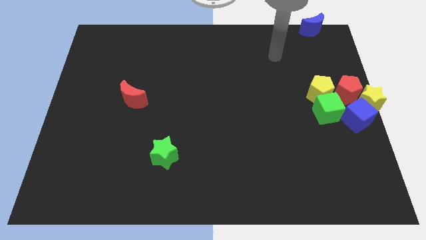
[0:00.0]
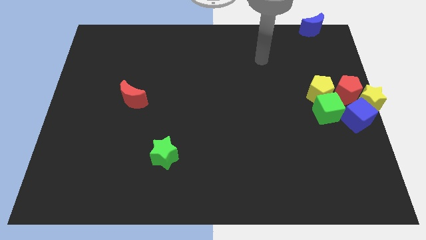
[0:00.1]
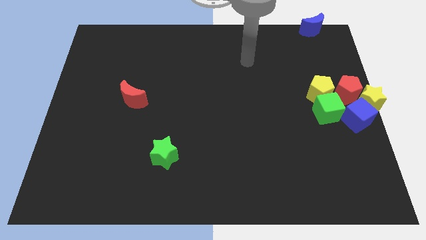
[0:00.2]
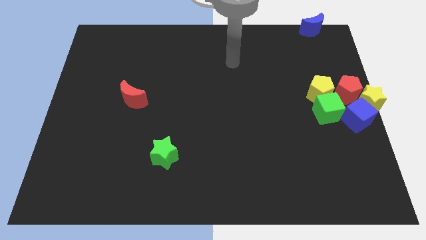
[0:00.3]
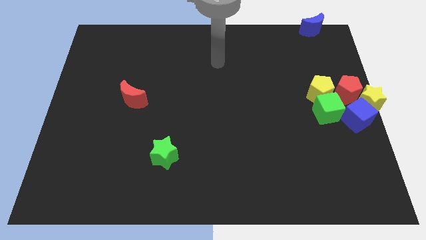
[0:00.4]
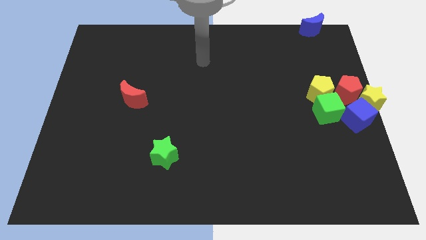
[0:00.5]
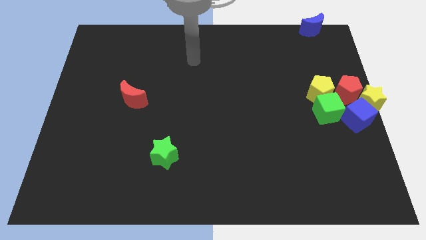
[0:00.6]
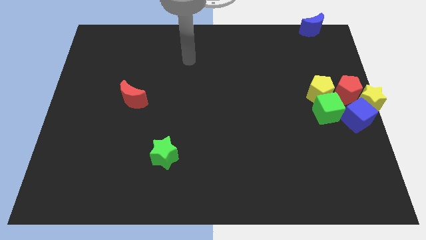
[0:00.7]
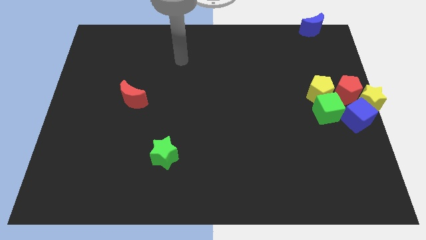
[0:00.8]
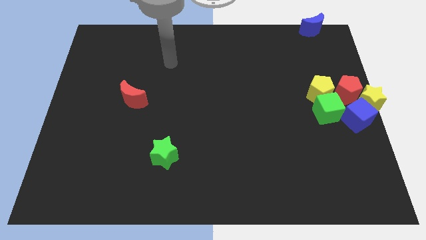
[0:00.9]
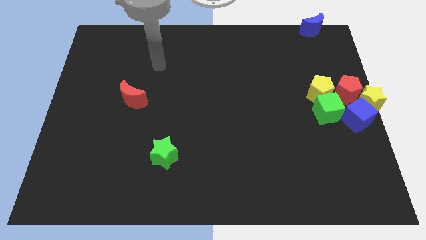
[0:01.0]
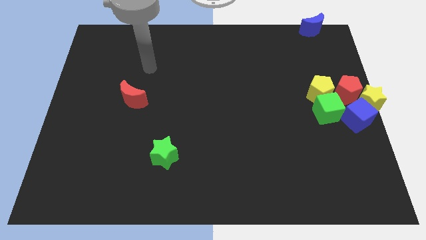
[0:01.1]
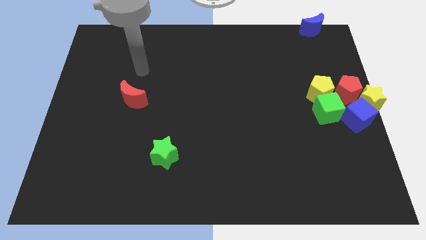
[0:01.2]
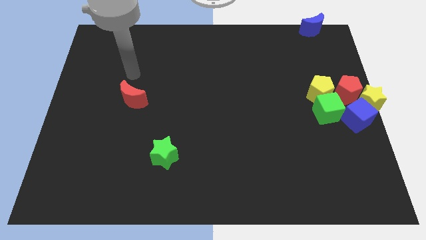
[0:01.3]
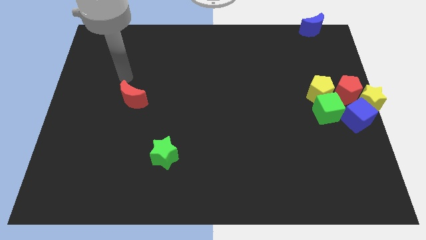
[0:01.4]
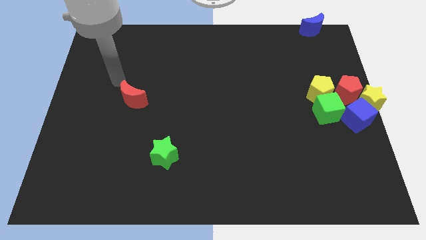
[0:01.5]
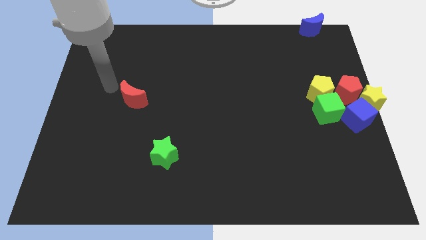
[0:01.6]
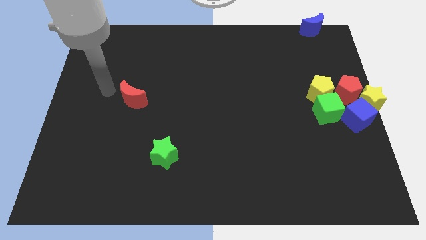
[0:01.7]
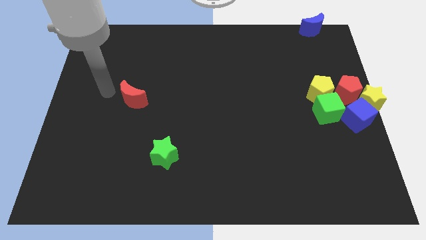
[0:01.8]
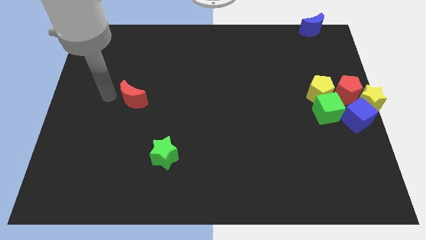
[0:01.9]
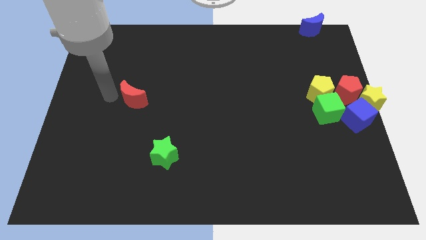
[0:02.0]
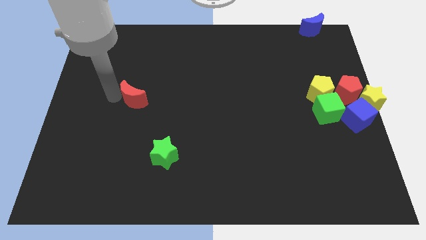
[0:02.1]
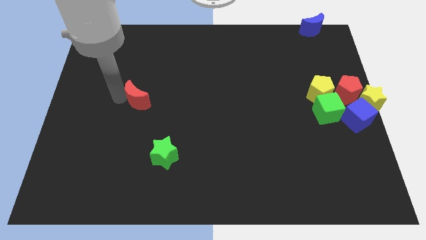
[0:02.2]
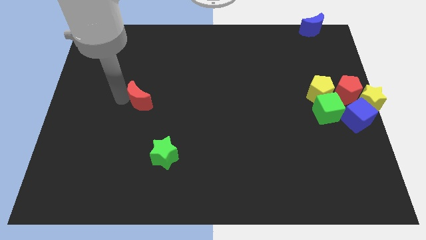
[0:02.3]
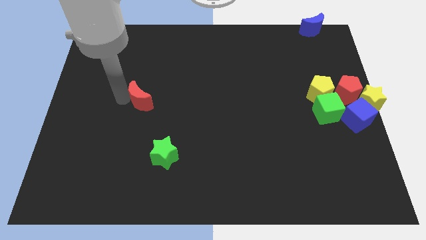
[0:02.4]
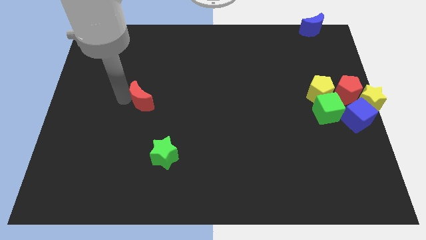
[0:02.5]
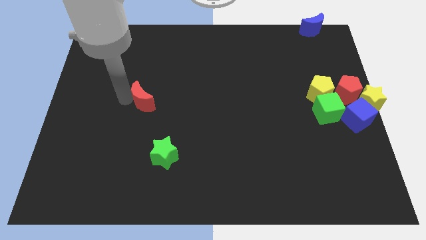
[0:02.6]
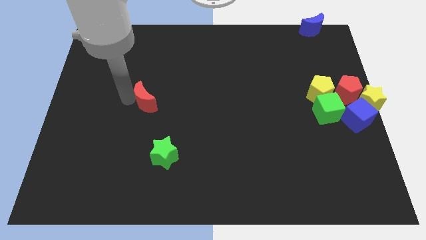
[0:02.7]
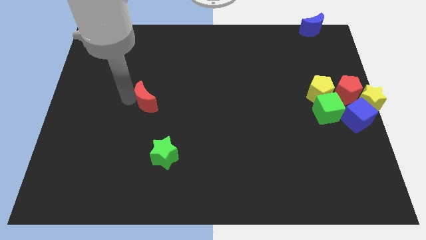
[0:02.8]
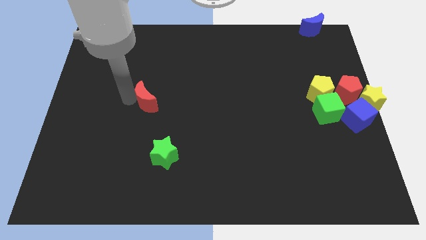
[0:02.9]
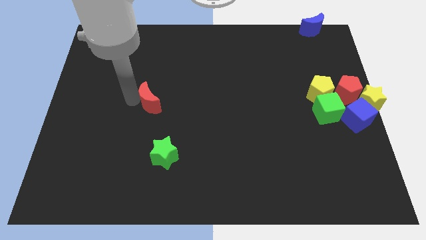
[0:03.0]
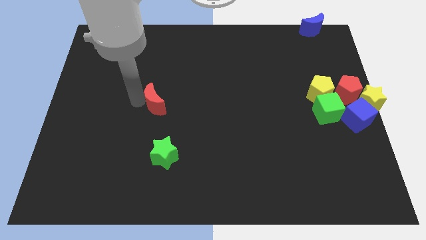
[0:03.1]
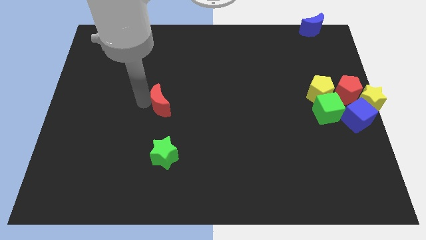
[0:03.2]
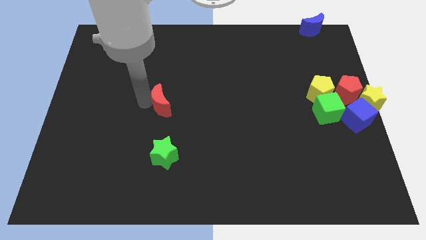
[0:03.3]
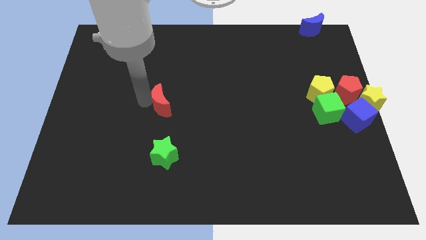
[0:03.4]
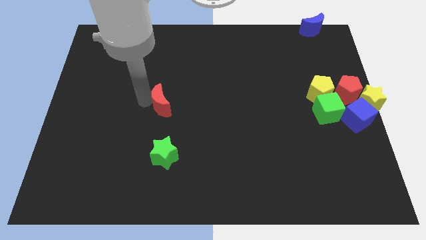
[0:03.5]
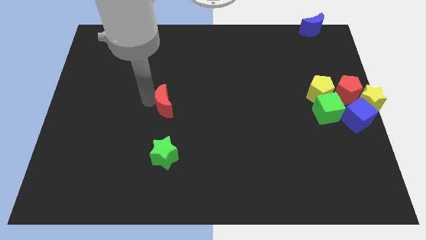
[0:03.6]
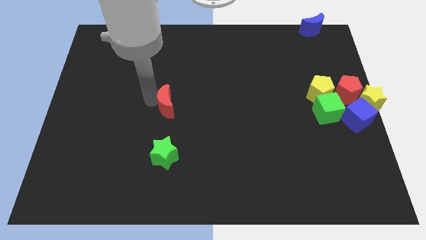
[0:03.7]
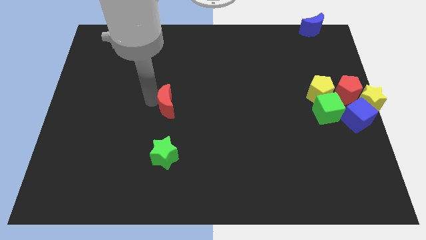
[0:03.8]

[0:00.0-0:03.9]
push the red crescent towards the top side of the green star

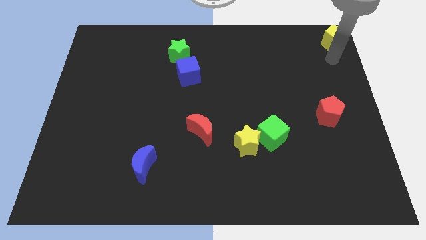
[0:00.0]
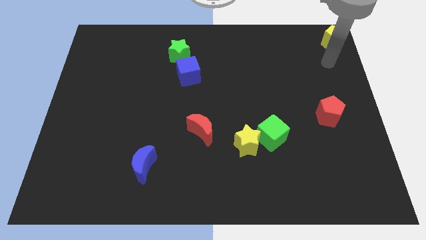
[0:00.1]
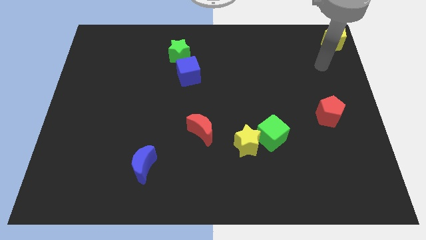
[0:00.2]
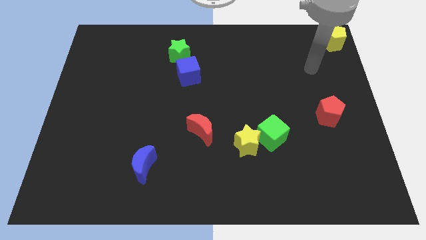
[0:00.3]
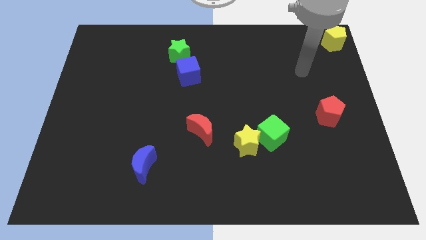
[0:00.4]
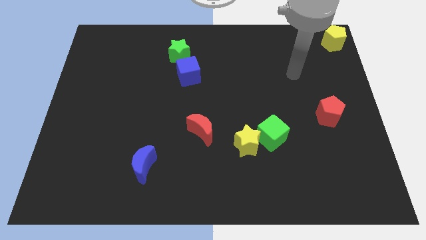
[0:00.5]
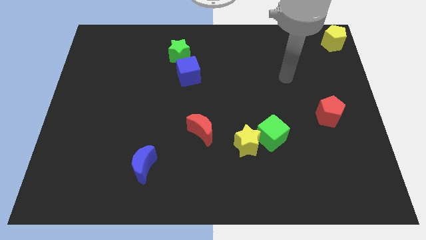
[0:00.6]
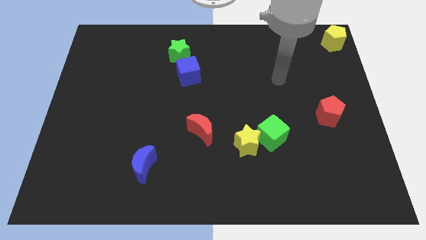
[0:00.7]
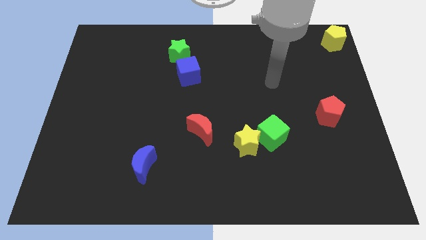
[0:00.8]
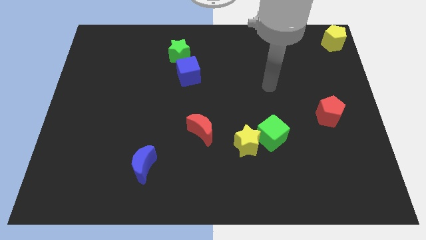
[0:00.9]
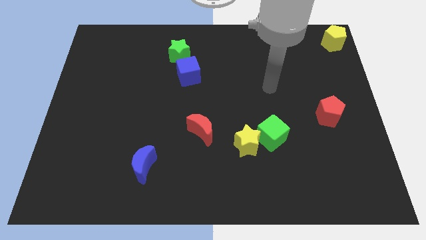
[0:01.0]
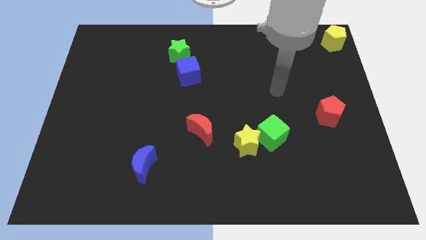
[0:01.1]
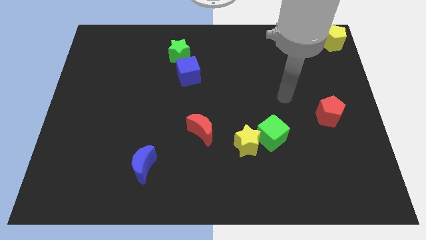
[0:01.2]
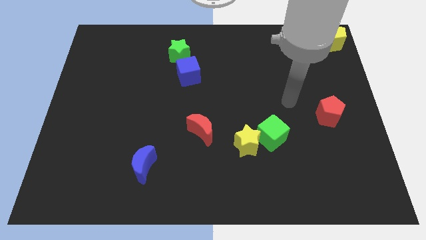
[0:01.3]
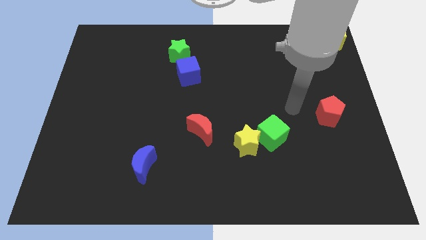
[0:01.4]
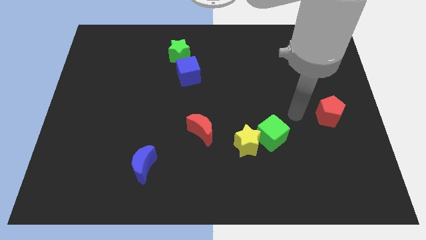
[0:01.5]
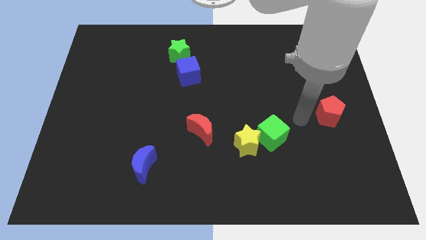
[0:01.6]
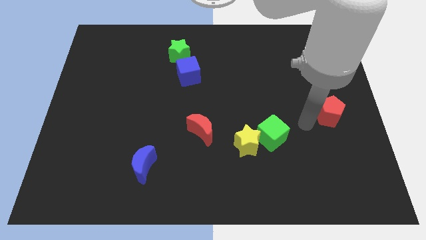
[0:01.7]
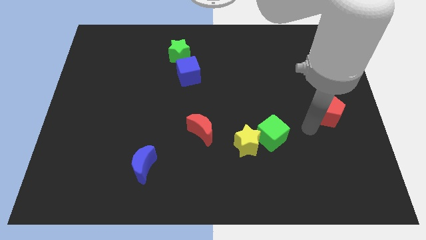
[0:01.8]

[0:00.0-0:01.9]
point your arm below red penatgon

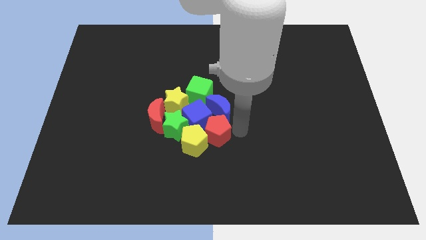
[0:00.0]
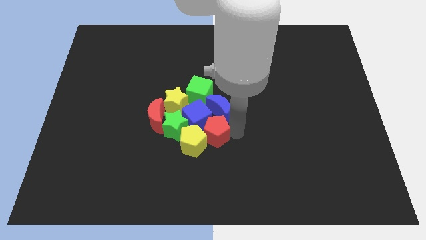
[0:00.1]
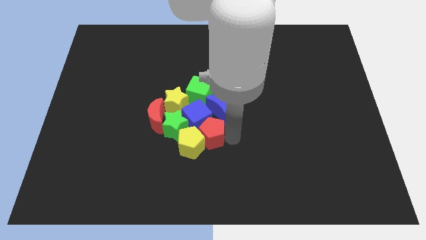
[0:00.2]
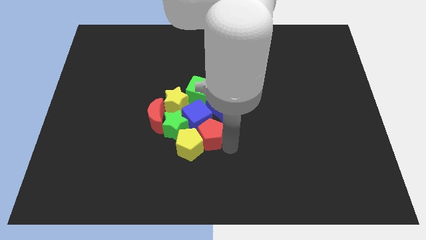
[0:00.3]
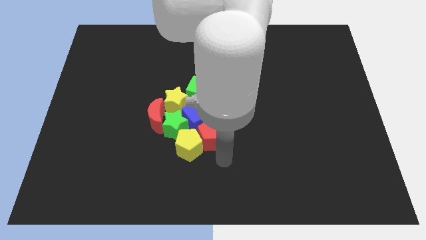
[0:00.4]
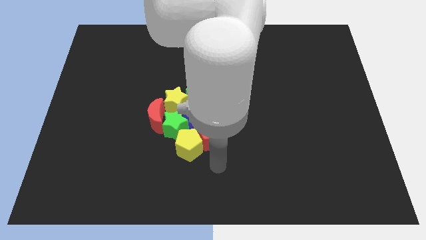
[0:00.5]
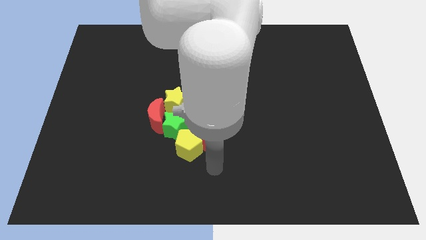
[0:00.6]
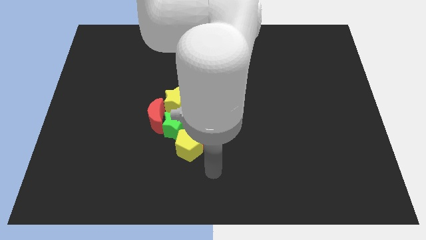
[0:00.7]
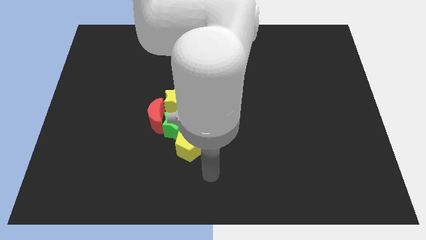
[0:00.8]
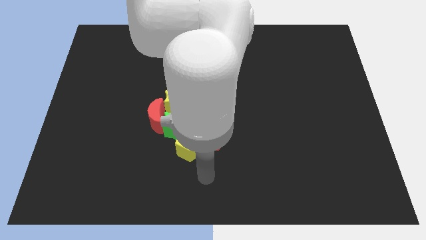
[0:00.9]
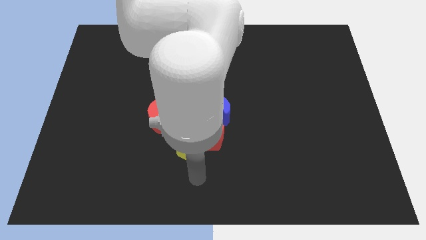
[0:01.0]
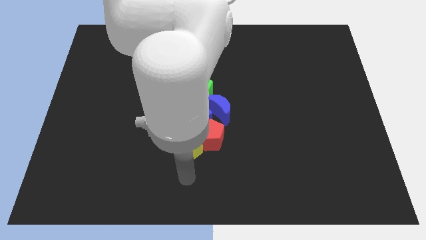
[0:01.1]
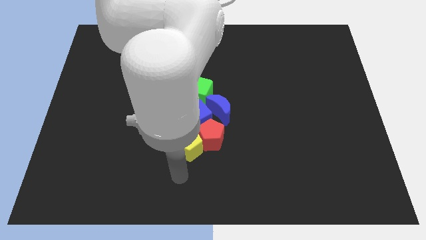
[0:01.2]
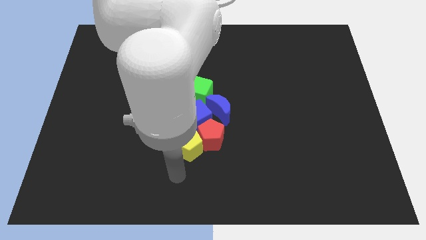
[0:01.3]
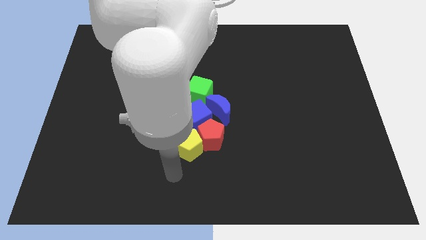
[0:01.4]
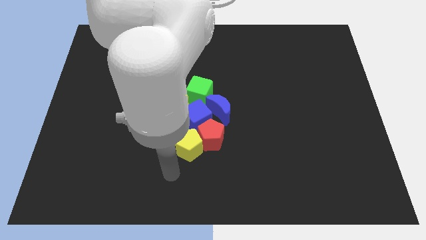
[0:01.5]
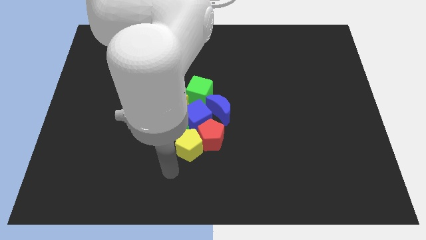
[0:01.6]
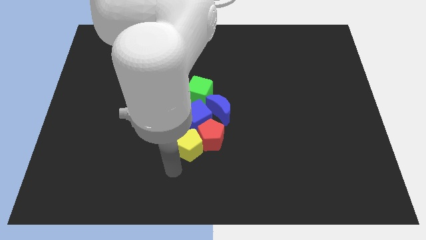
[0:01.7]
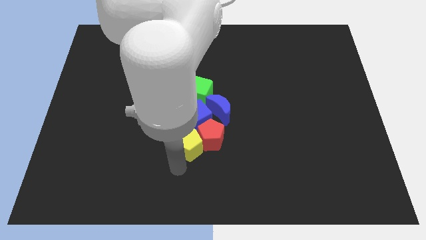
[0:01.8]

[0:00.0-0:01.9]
move your arm close to the yellow pentagon

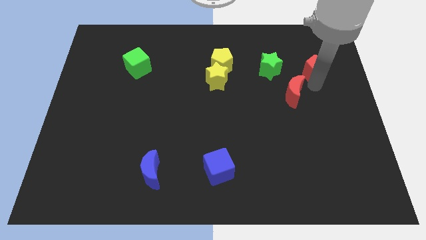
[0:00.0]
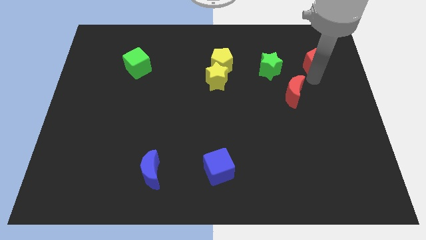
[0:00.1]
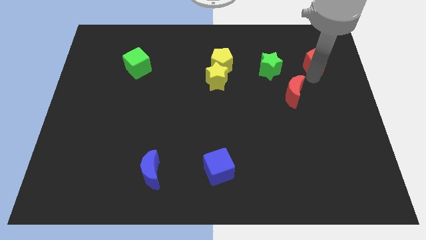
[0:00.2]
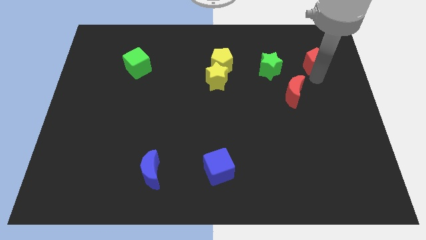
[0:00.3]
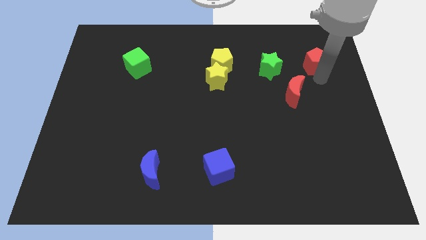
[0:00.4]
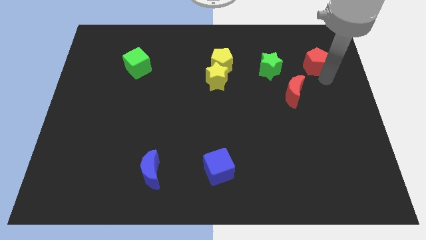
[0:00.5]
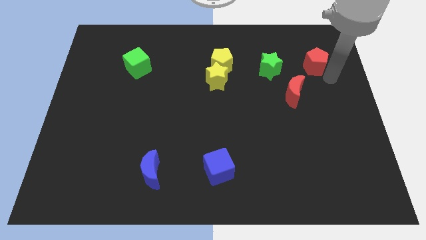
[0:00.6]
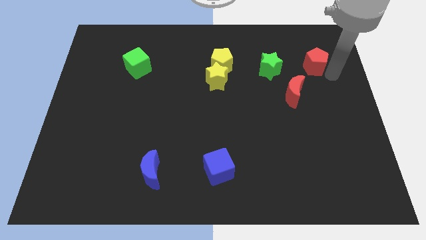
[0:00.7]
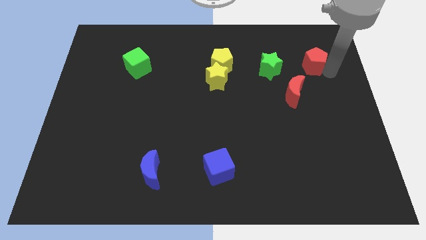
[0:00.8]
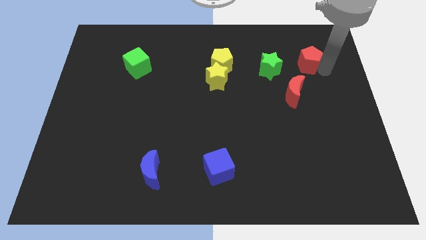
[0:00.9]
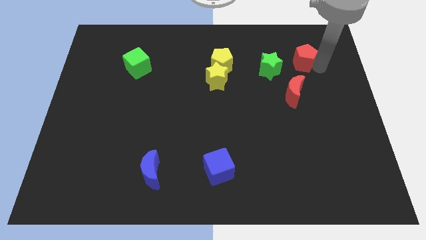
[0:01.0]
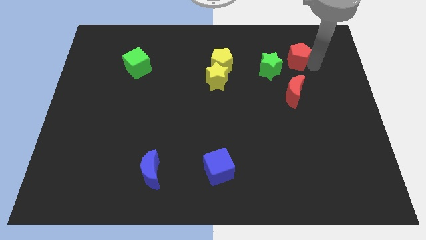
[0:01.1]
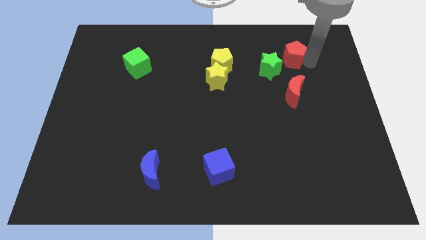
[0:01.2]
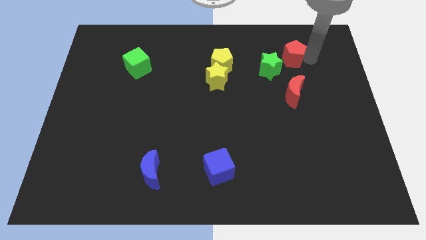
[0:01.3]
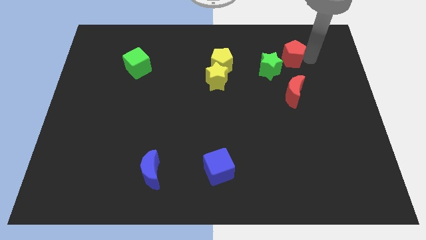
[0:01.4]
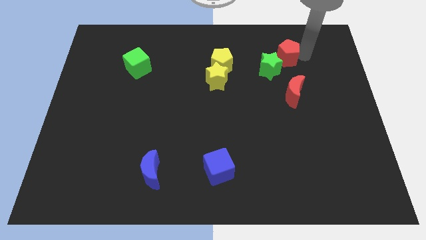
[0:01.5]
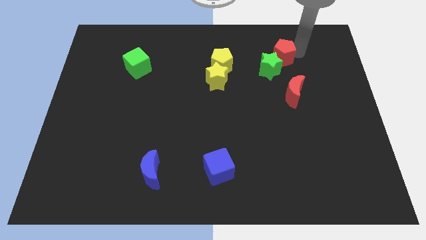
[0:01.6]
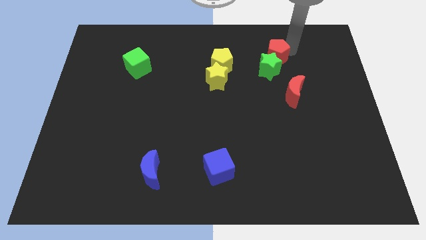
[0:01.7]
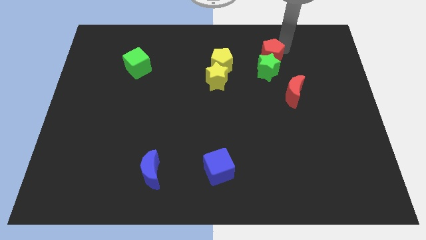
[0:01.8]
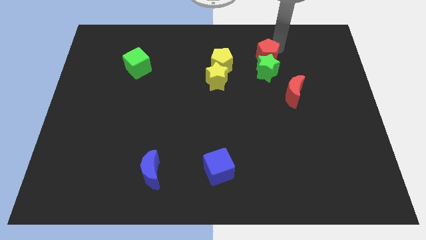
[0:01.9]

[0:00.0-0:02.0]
move the red pentagon to the top of the green star
